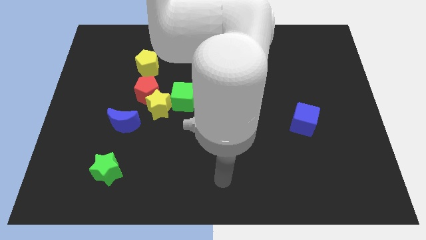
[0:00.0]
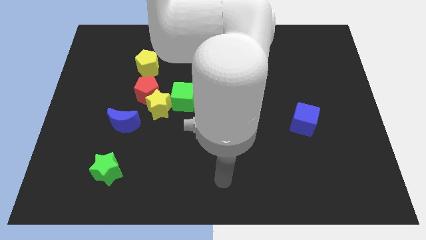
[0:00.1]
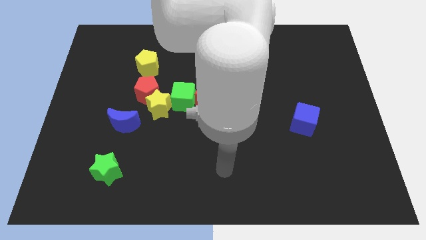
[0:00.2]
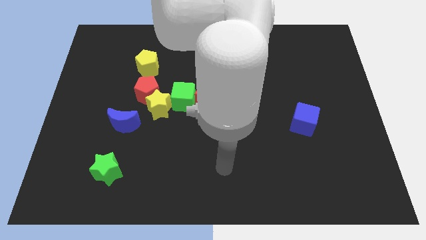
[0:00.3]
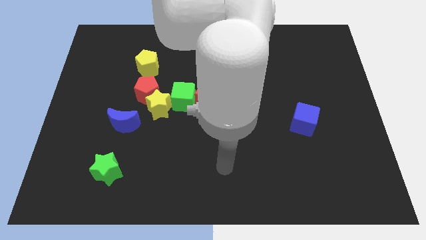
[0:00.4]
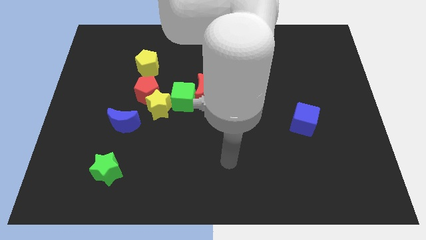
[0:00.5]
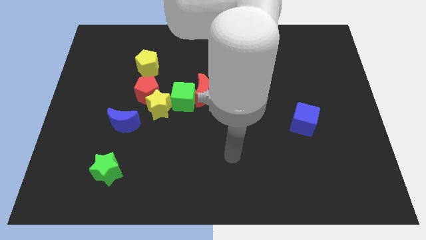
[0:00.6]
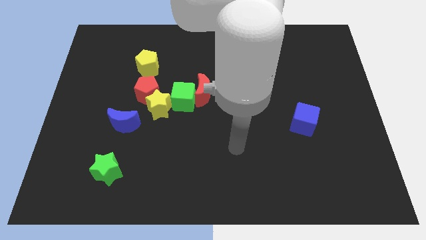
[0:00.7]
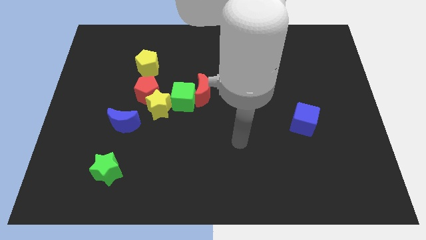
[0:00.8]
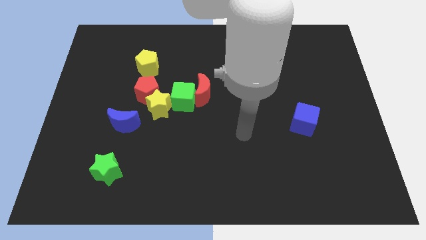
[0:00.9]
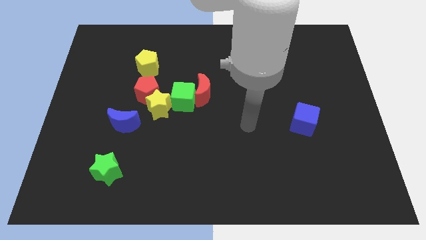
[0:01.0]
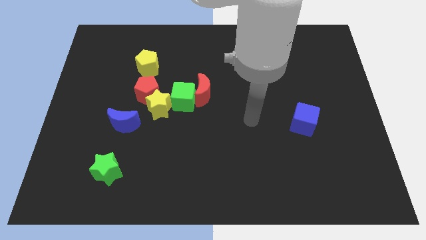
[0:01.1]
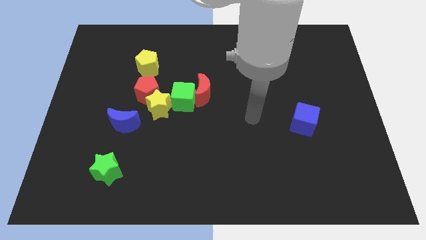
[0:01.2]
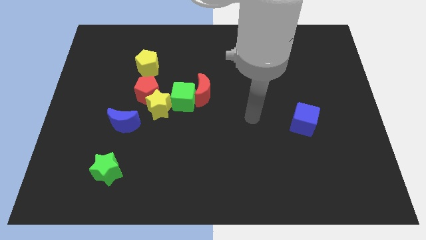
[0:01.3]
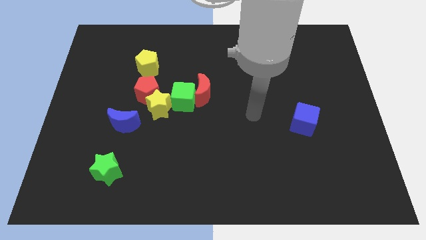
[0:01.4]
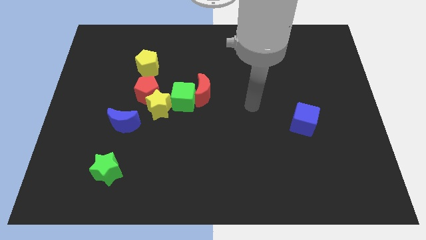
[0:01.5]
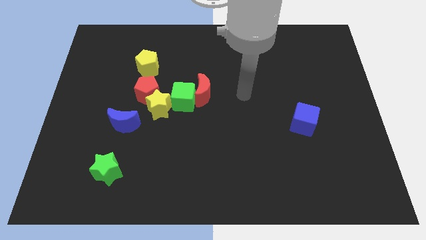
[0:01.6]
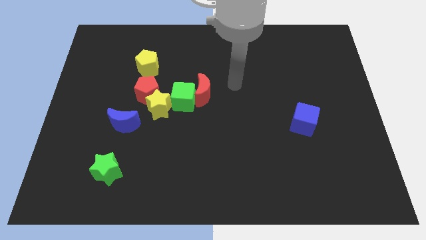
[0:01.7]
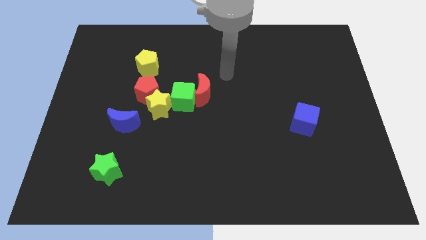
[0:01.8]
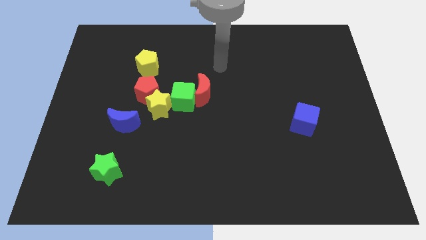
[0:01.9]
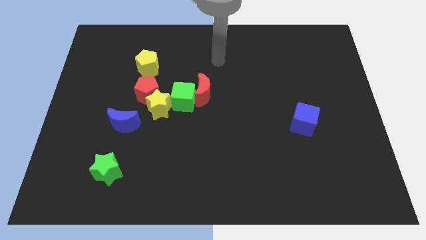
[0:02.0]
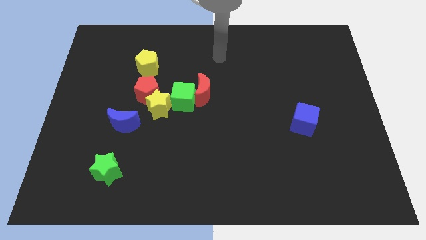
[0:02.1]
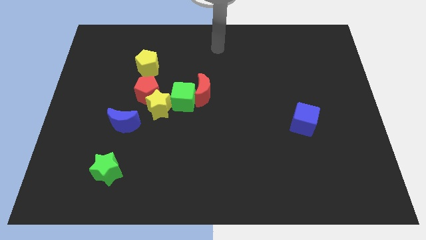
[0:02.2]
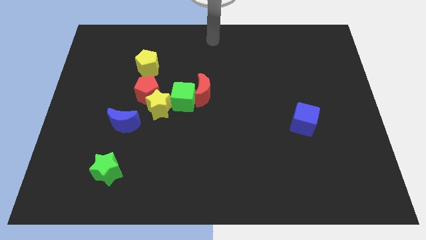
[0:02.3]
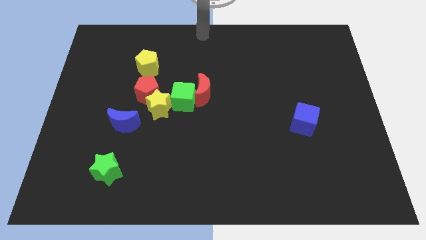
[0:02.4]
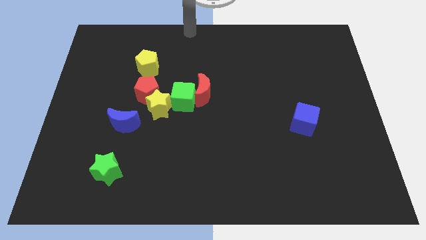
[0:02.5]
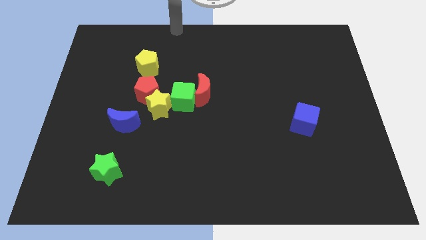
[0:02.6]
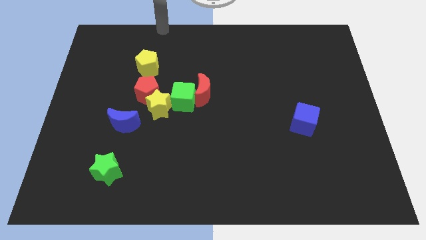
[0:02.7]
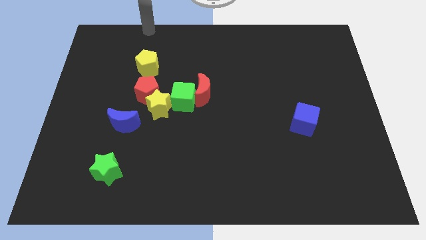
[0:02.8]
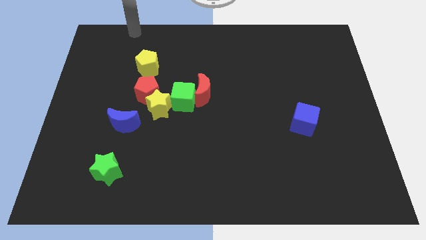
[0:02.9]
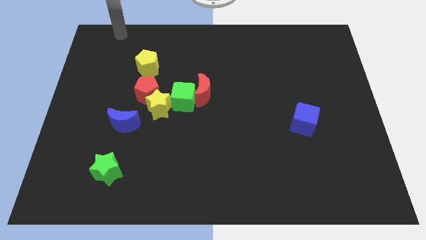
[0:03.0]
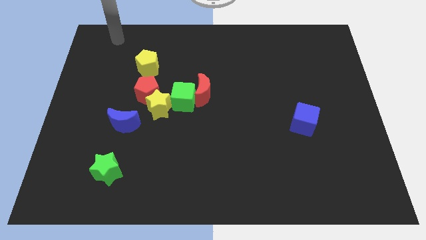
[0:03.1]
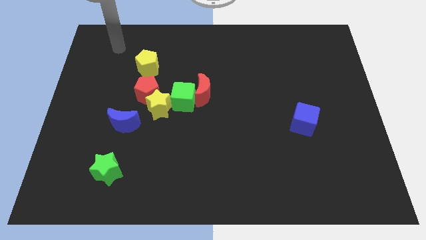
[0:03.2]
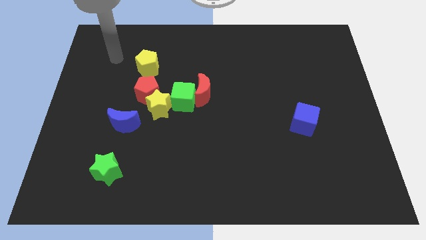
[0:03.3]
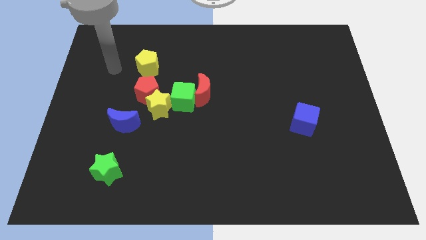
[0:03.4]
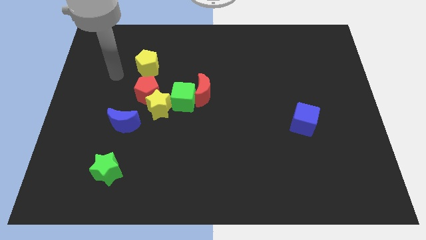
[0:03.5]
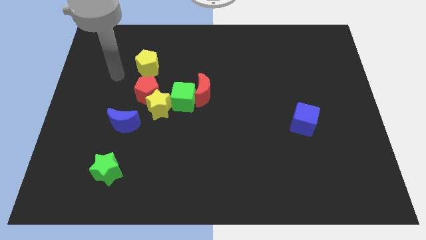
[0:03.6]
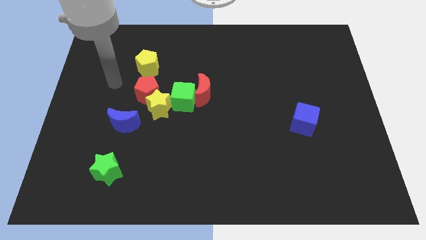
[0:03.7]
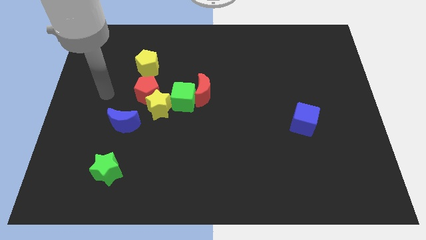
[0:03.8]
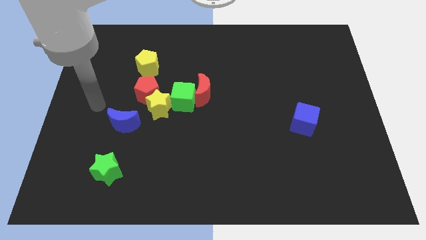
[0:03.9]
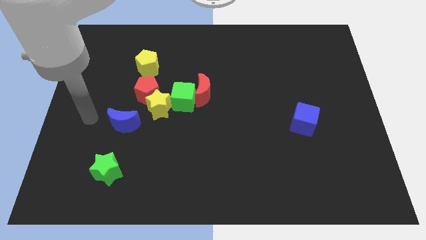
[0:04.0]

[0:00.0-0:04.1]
point your hand to the left of the blue crescent

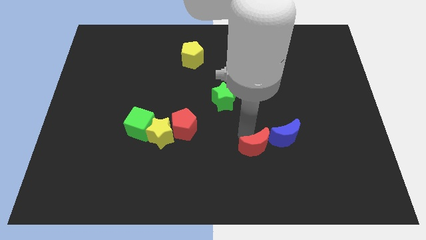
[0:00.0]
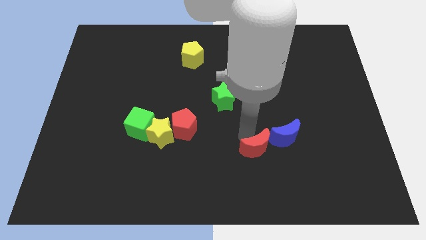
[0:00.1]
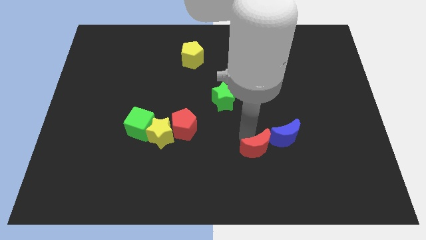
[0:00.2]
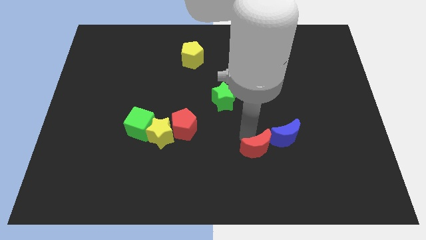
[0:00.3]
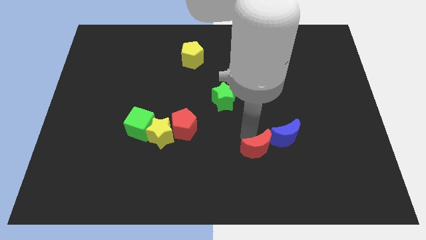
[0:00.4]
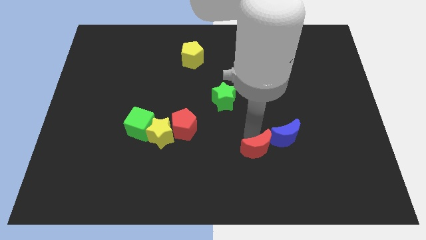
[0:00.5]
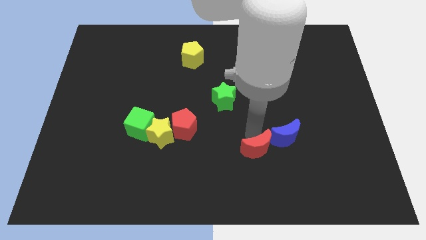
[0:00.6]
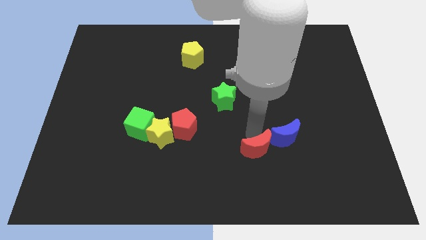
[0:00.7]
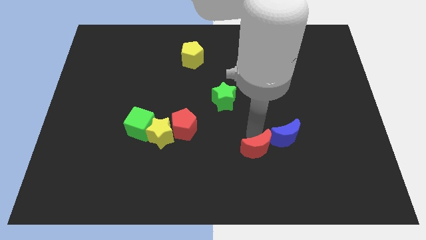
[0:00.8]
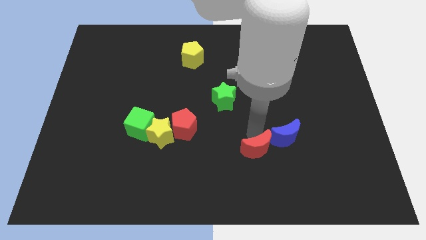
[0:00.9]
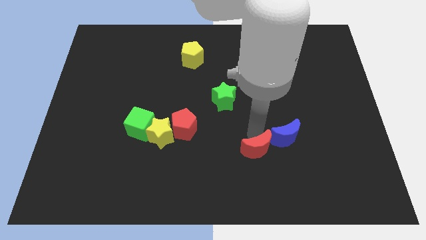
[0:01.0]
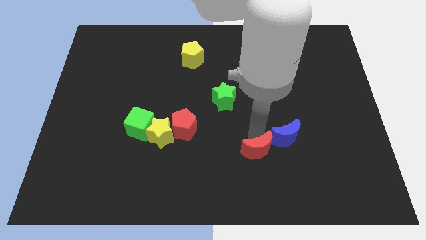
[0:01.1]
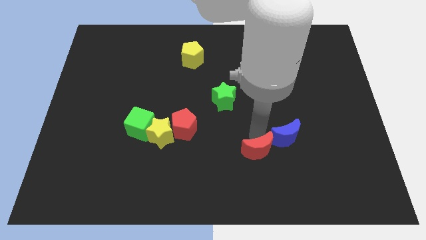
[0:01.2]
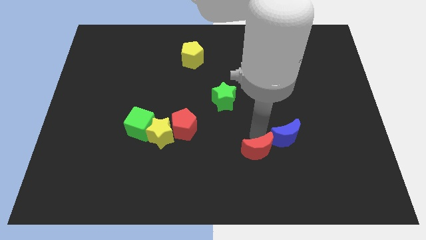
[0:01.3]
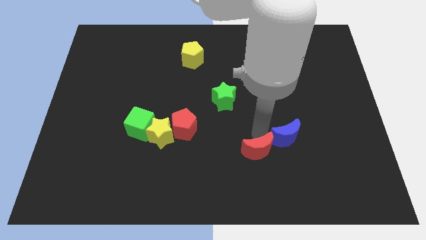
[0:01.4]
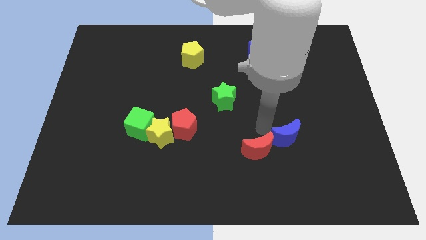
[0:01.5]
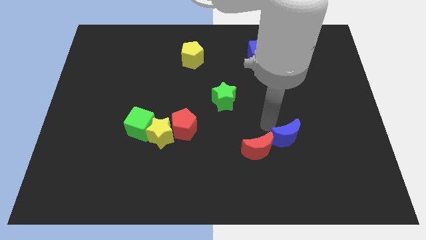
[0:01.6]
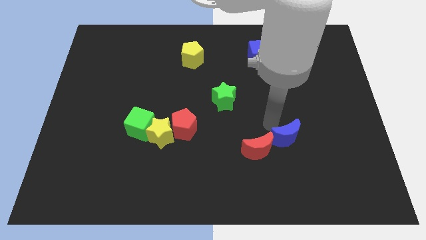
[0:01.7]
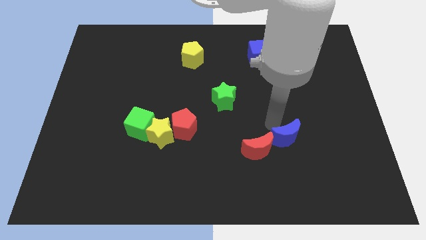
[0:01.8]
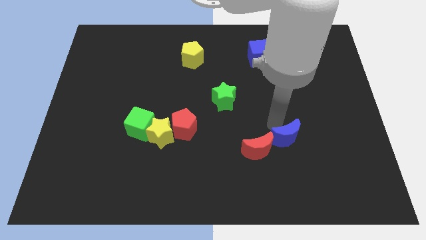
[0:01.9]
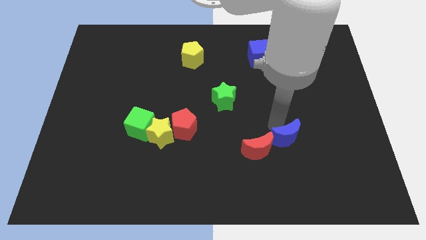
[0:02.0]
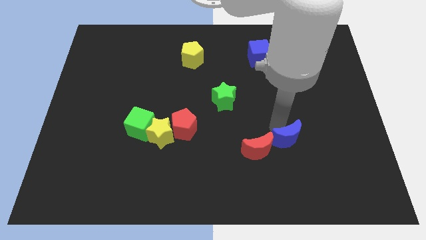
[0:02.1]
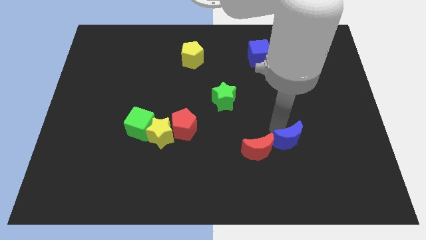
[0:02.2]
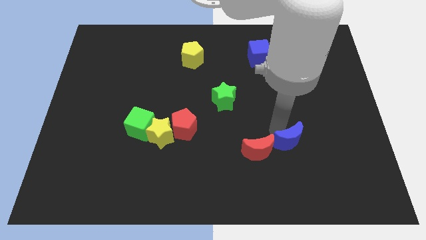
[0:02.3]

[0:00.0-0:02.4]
put the red crescent and the blue crescent together

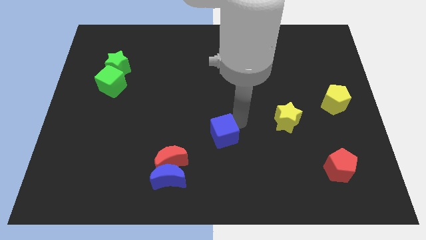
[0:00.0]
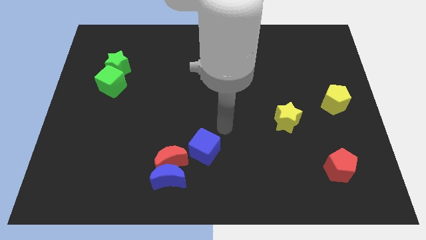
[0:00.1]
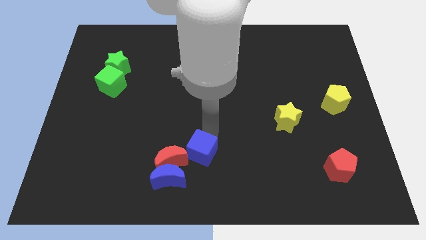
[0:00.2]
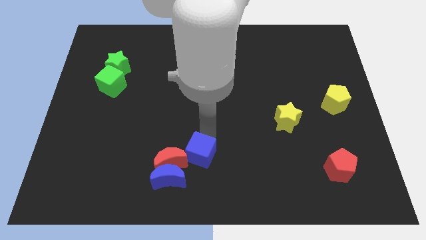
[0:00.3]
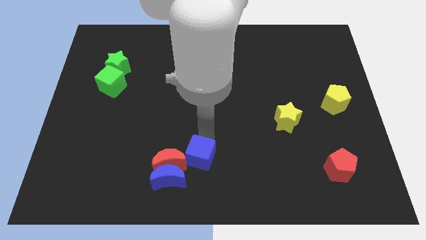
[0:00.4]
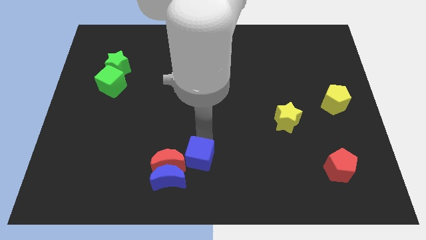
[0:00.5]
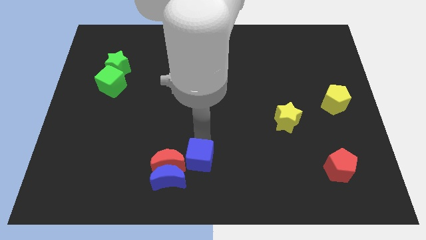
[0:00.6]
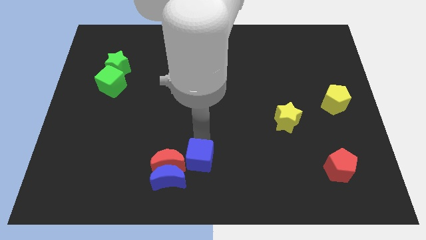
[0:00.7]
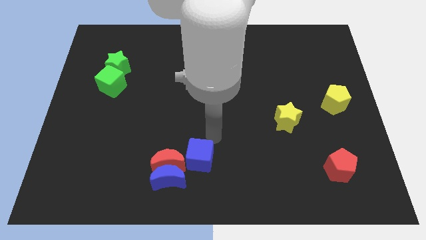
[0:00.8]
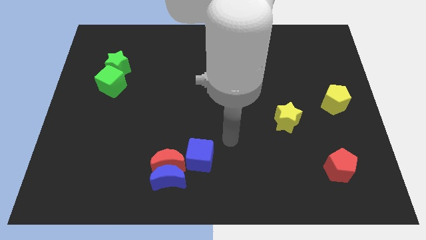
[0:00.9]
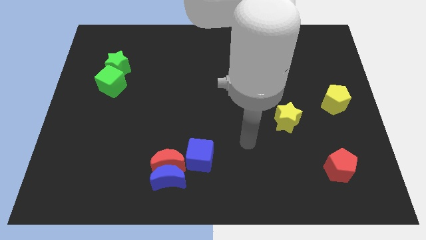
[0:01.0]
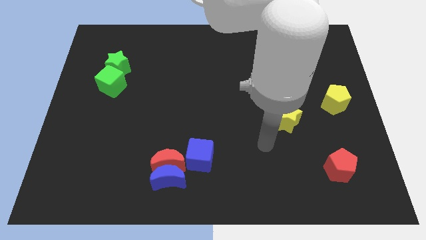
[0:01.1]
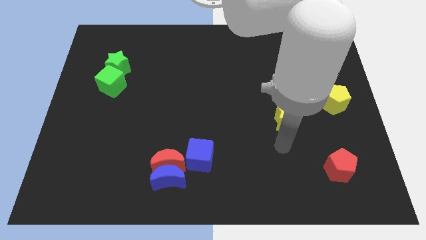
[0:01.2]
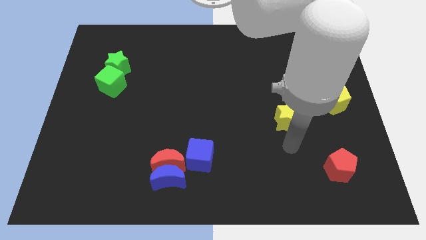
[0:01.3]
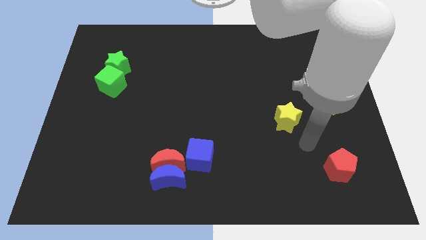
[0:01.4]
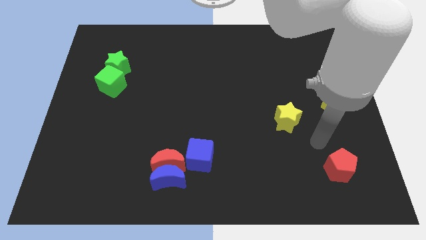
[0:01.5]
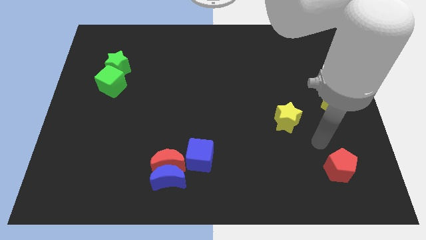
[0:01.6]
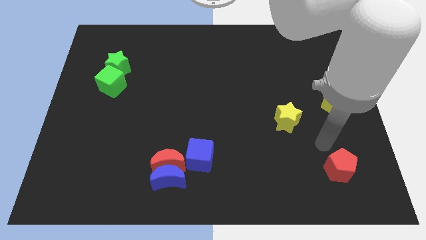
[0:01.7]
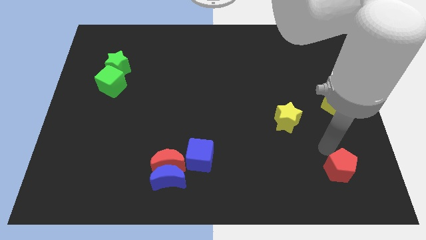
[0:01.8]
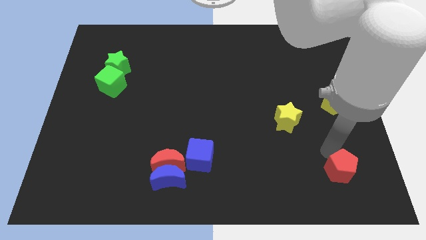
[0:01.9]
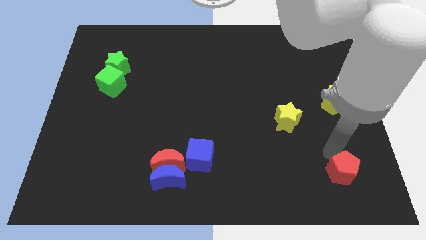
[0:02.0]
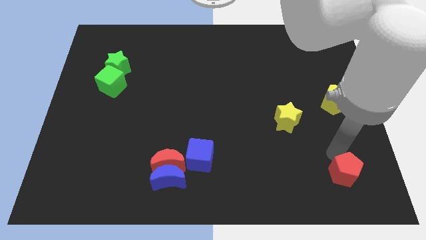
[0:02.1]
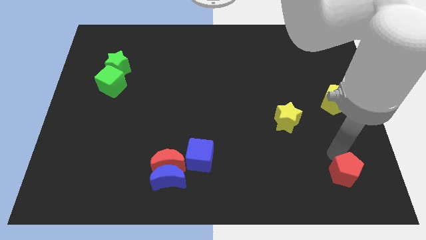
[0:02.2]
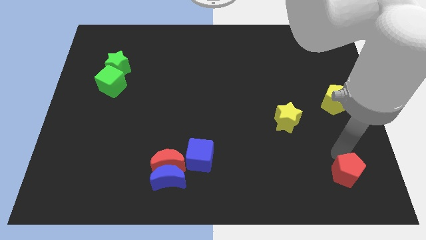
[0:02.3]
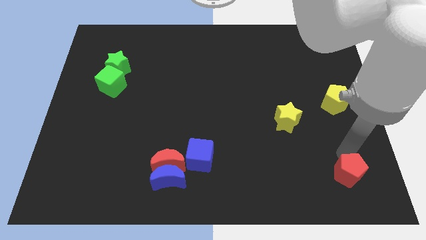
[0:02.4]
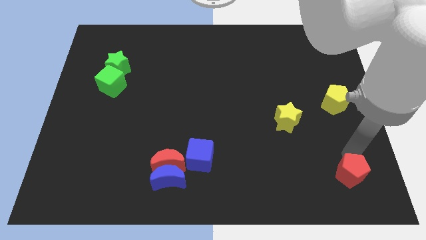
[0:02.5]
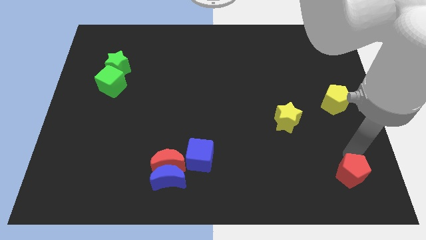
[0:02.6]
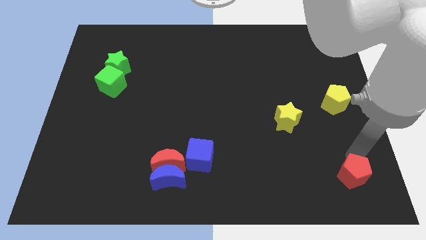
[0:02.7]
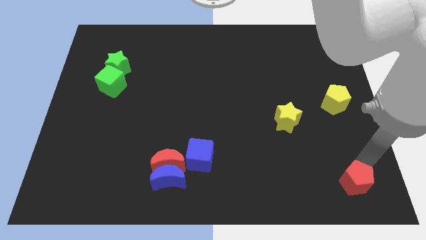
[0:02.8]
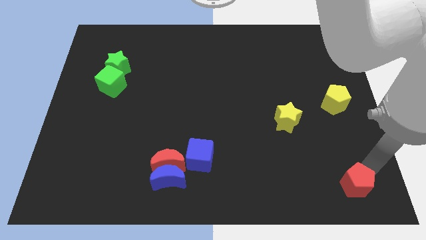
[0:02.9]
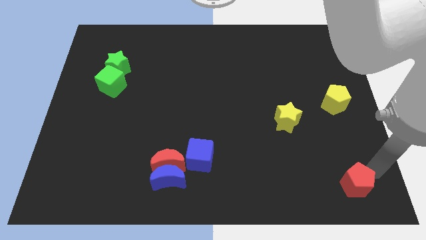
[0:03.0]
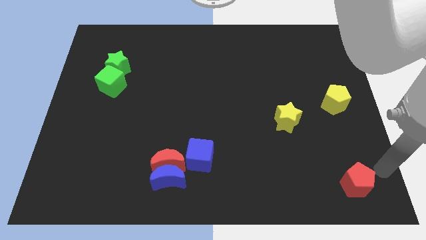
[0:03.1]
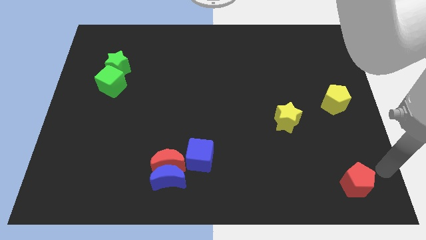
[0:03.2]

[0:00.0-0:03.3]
place blue cube right of red crescent
